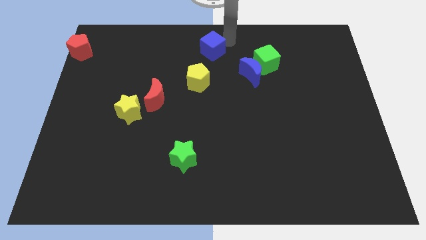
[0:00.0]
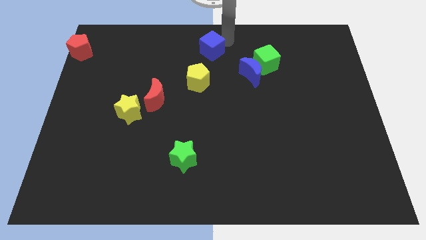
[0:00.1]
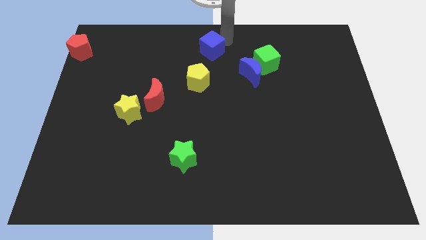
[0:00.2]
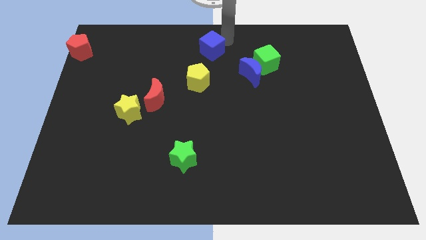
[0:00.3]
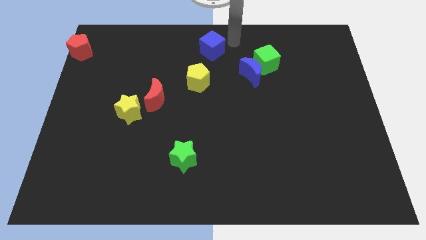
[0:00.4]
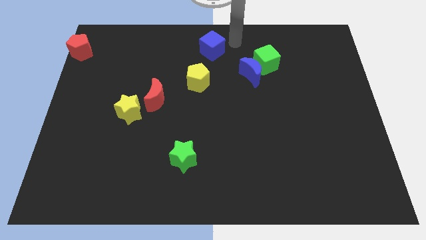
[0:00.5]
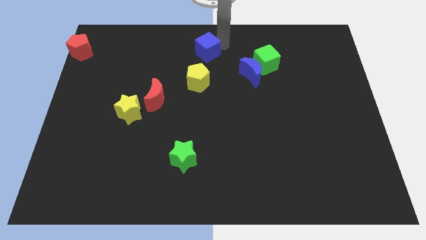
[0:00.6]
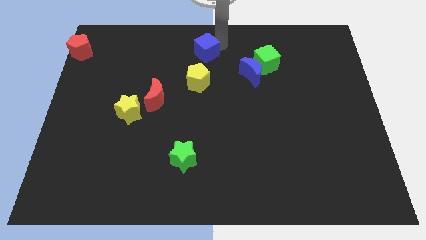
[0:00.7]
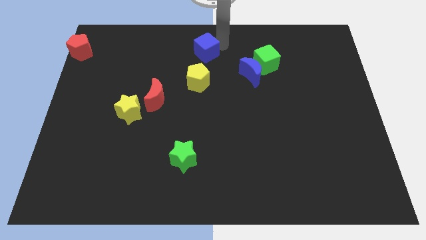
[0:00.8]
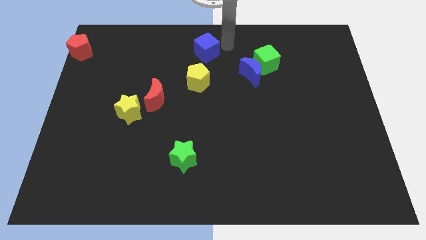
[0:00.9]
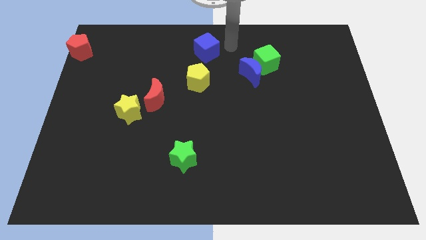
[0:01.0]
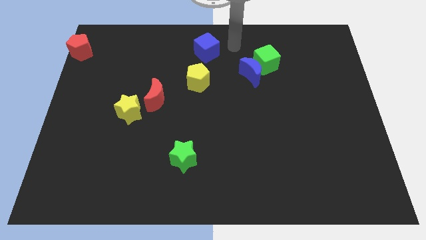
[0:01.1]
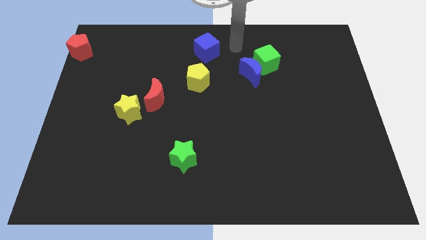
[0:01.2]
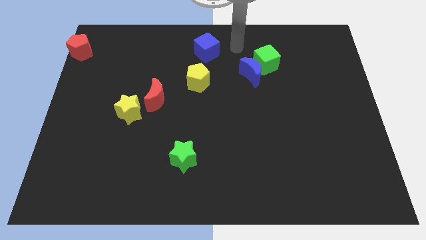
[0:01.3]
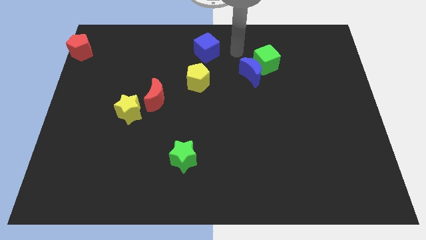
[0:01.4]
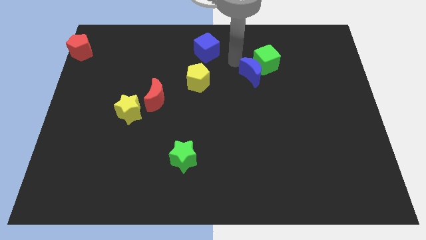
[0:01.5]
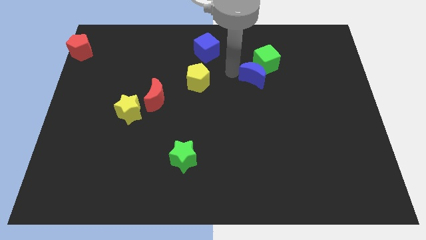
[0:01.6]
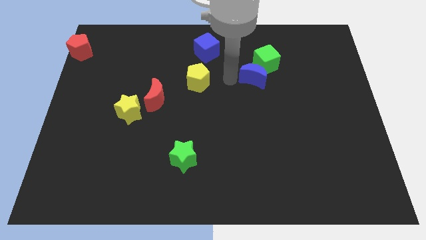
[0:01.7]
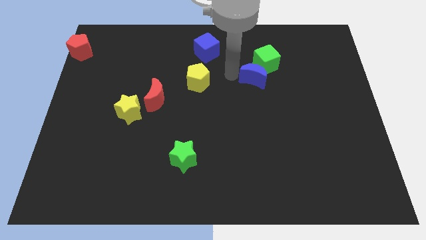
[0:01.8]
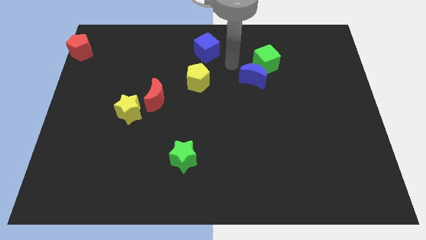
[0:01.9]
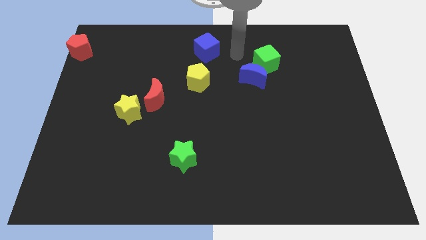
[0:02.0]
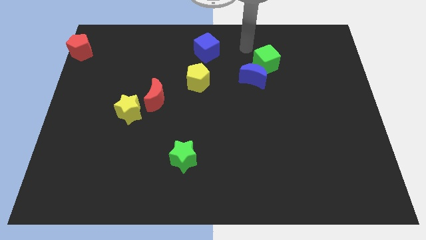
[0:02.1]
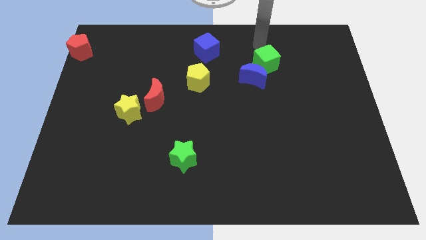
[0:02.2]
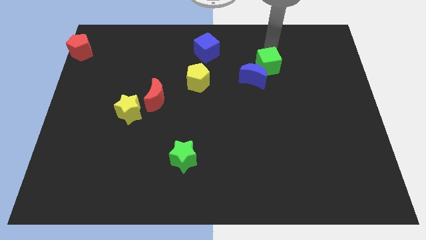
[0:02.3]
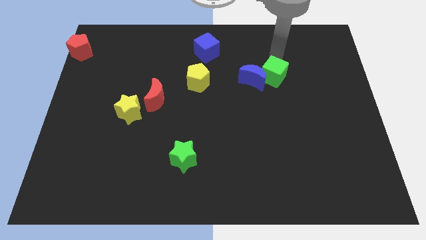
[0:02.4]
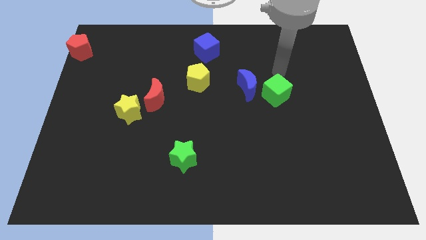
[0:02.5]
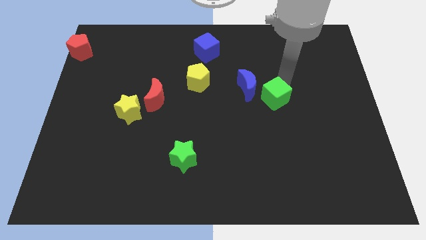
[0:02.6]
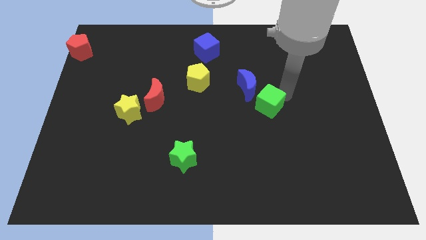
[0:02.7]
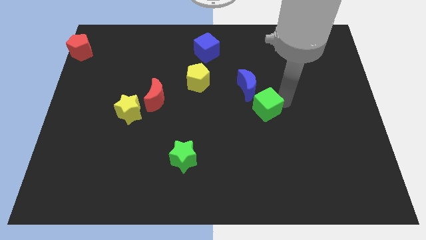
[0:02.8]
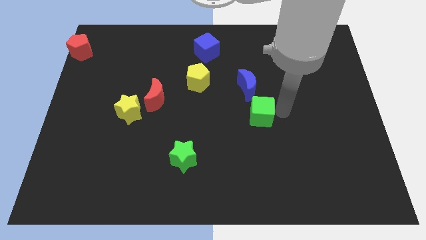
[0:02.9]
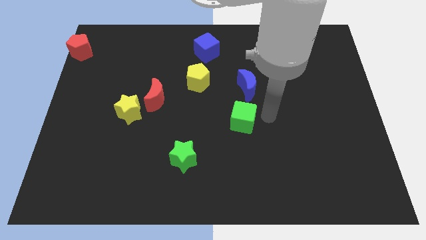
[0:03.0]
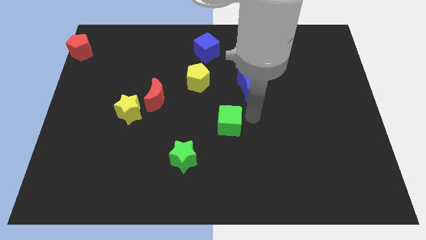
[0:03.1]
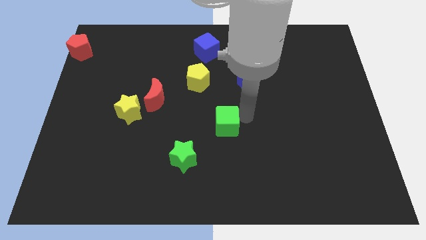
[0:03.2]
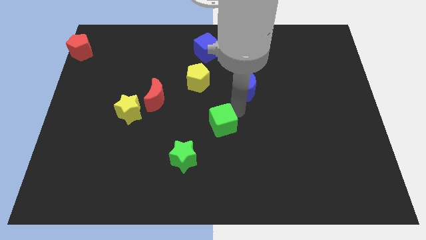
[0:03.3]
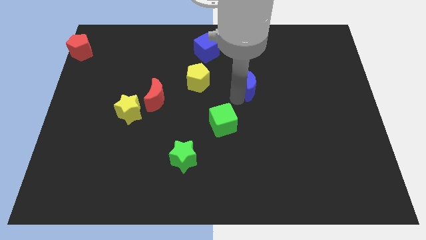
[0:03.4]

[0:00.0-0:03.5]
move green cube to the bottom right of yellow pentagon

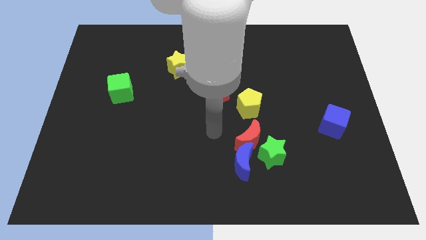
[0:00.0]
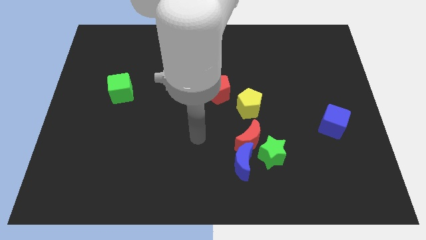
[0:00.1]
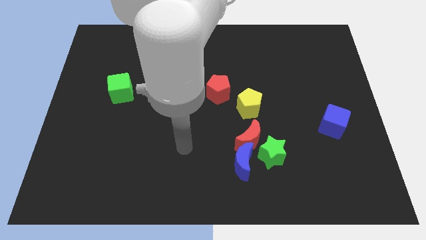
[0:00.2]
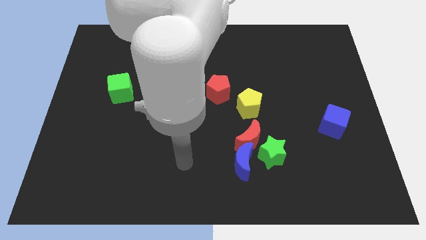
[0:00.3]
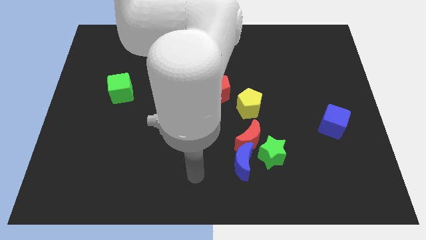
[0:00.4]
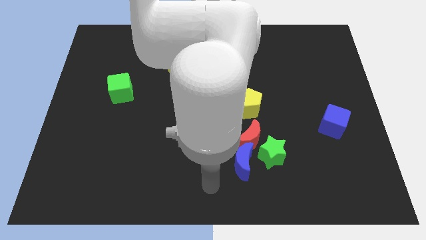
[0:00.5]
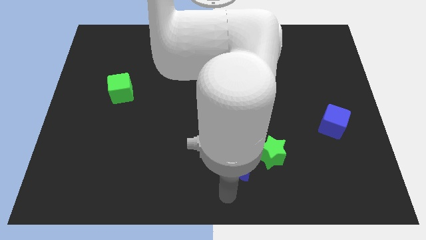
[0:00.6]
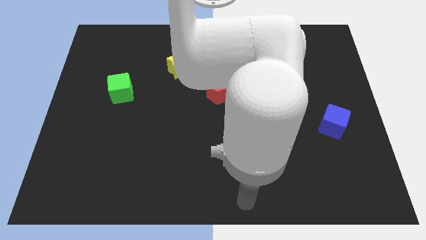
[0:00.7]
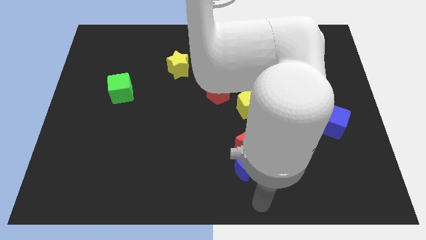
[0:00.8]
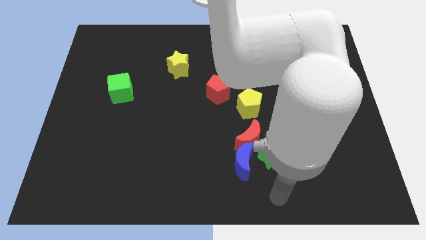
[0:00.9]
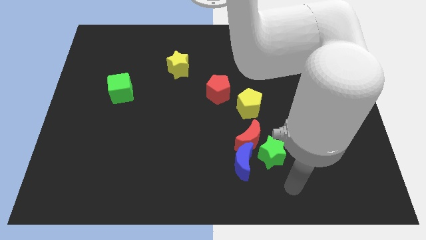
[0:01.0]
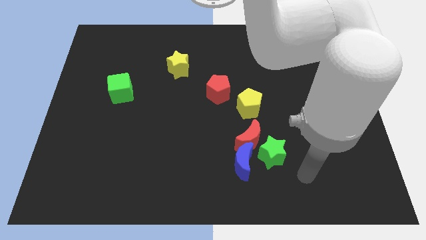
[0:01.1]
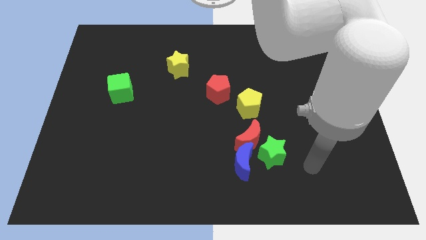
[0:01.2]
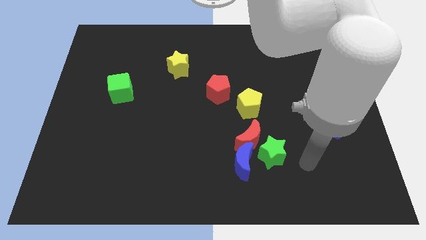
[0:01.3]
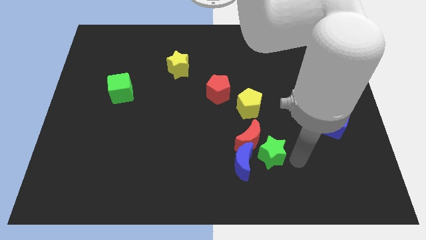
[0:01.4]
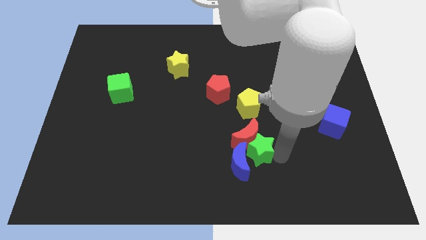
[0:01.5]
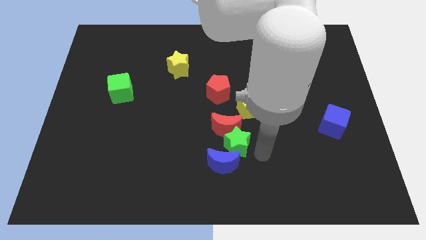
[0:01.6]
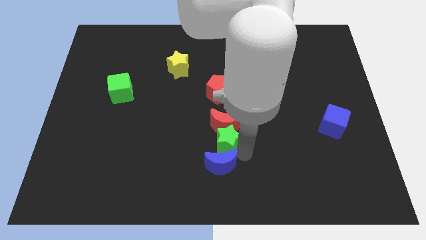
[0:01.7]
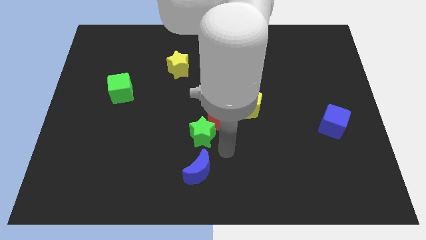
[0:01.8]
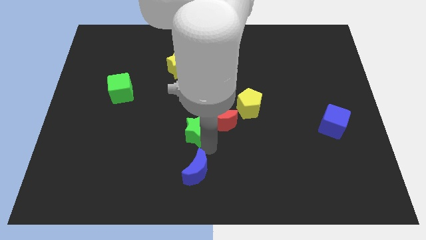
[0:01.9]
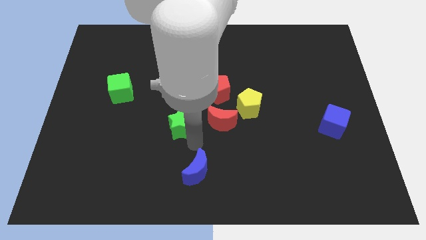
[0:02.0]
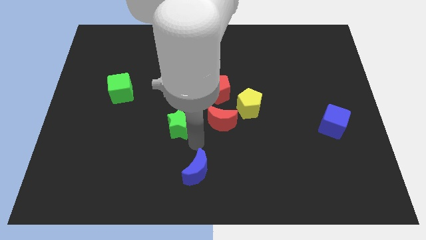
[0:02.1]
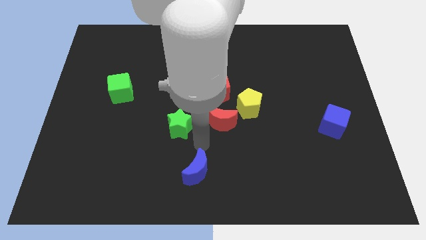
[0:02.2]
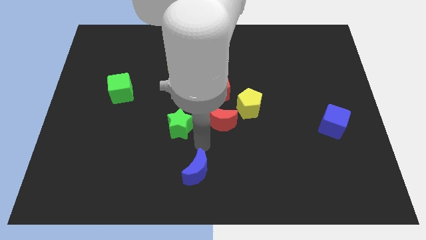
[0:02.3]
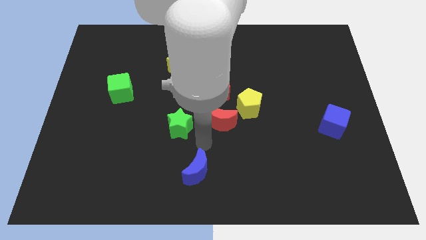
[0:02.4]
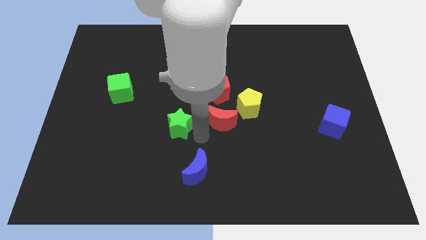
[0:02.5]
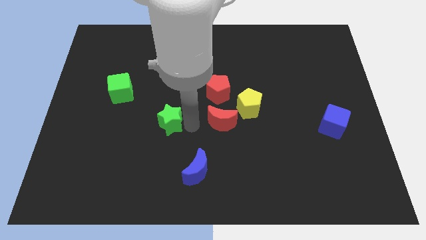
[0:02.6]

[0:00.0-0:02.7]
place green star to the bottom of yellow star

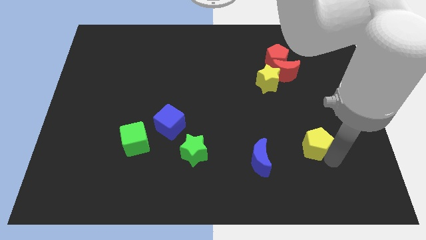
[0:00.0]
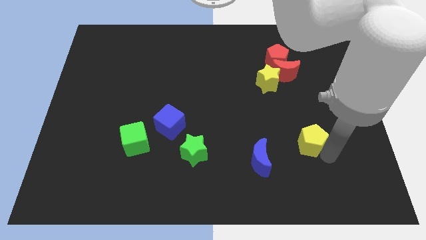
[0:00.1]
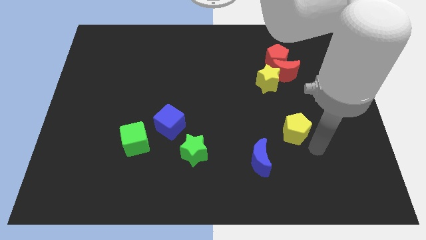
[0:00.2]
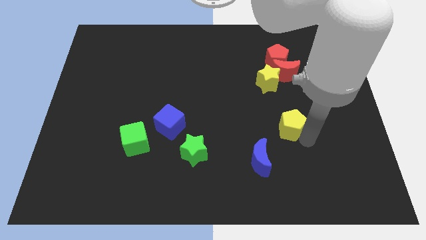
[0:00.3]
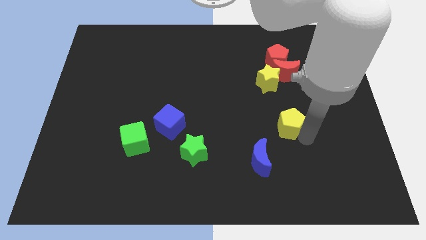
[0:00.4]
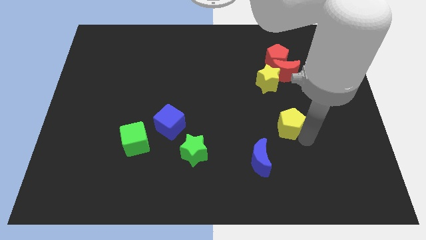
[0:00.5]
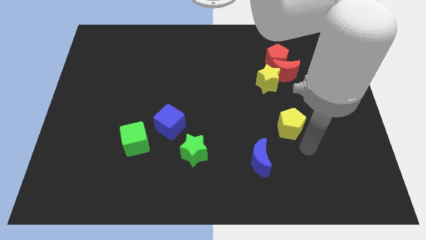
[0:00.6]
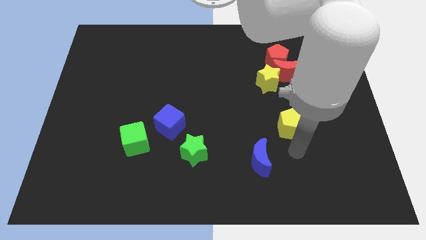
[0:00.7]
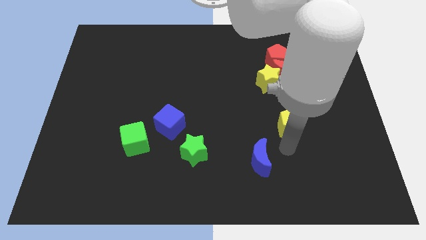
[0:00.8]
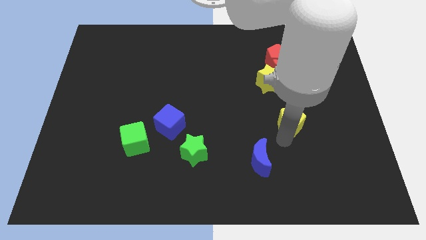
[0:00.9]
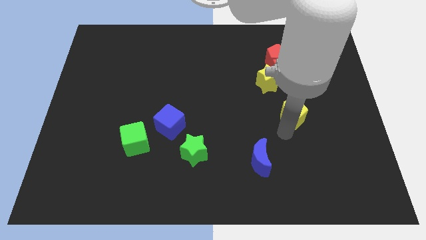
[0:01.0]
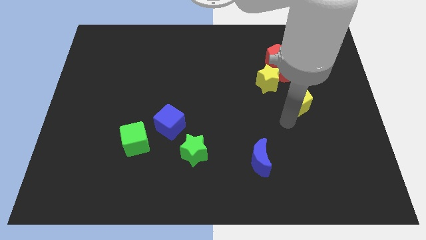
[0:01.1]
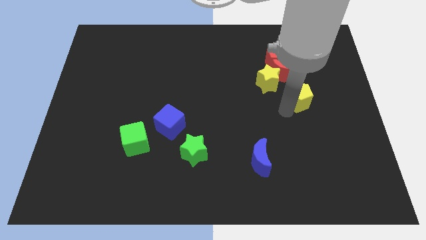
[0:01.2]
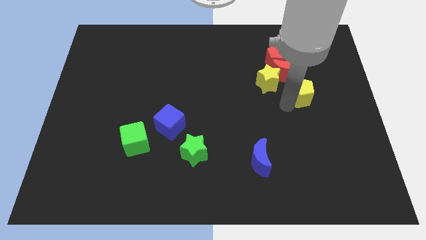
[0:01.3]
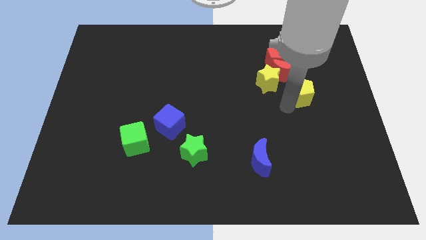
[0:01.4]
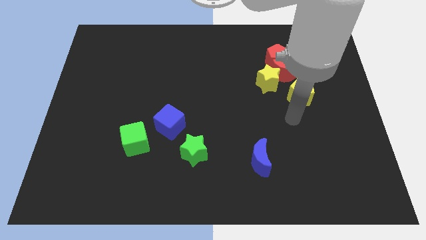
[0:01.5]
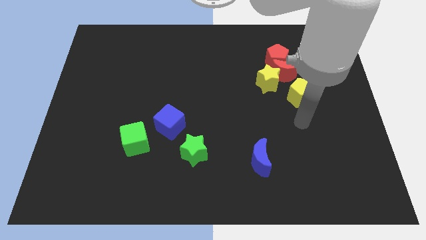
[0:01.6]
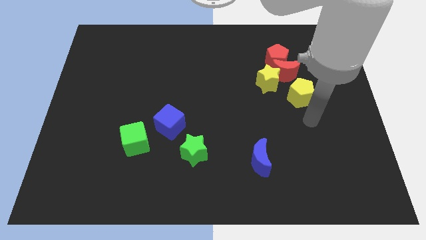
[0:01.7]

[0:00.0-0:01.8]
slide the yellow pentagon towards the red moon

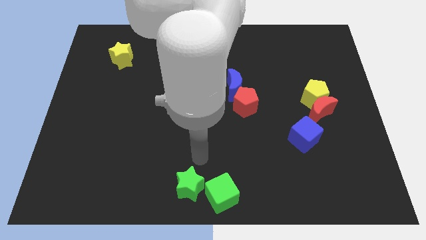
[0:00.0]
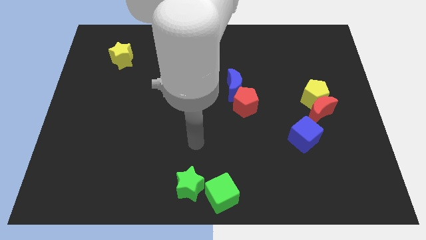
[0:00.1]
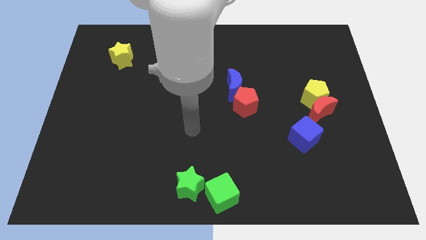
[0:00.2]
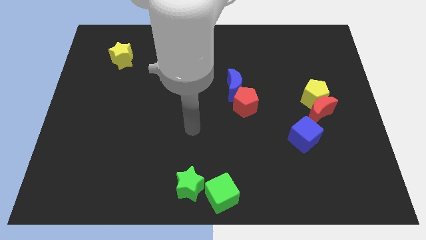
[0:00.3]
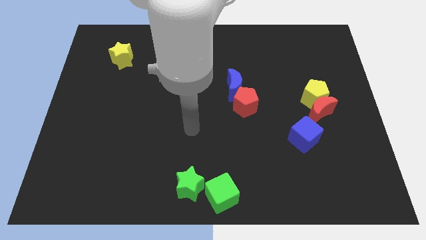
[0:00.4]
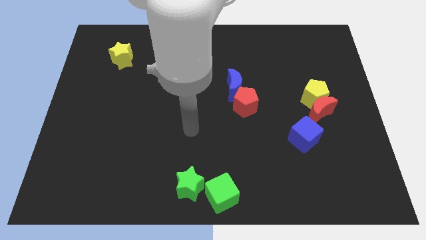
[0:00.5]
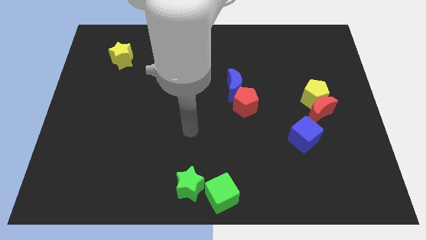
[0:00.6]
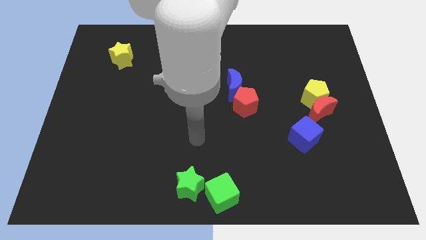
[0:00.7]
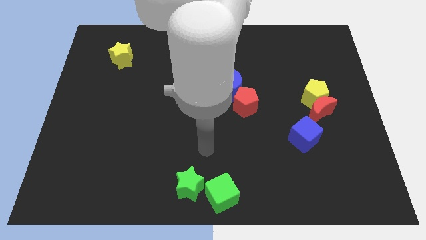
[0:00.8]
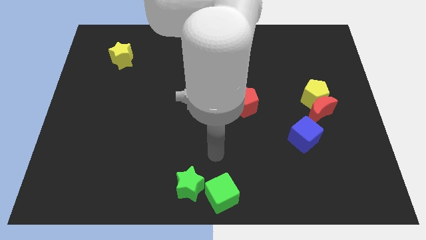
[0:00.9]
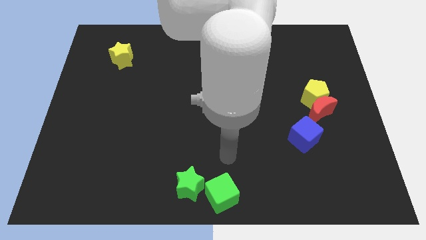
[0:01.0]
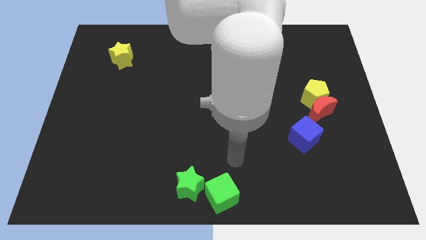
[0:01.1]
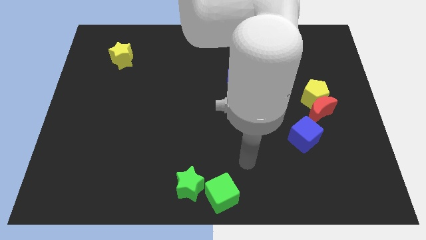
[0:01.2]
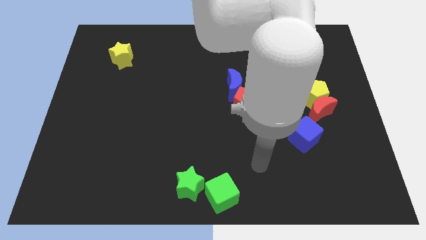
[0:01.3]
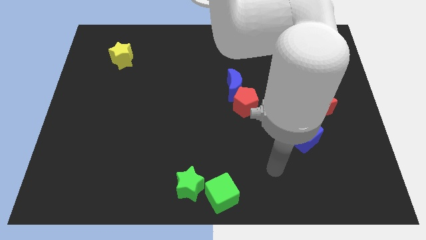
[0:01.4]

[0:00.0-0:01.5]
move the arm away from the green star
